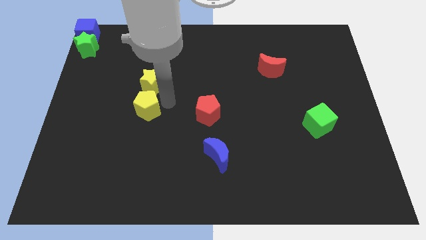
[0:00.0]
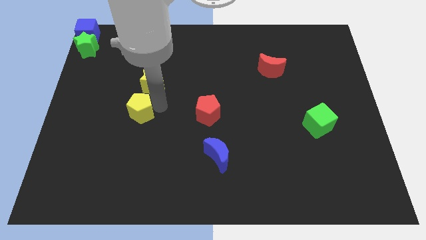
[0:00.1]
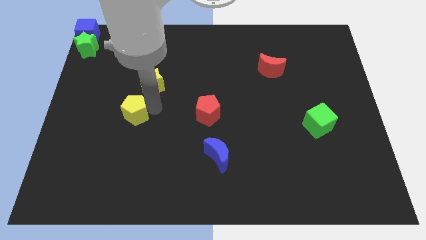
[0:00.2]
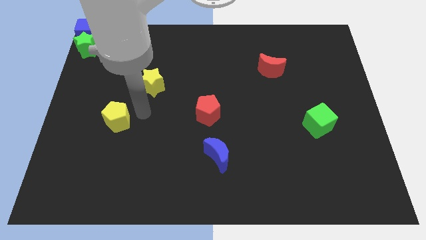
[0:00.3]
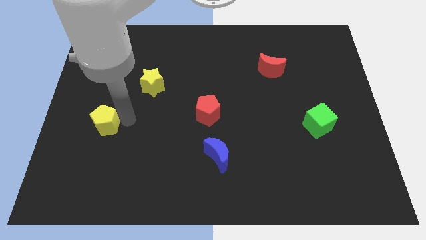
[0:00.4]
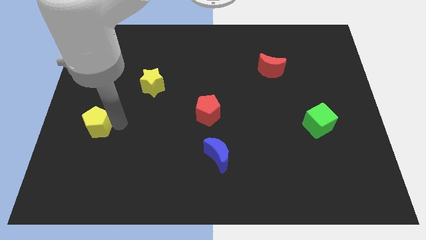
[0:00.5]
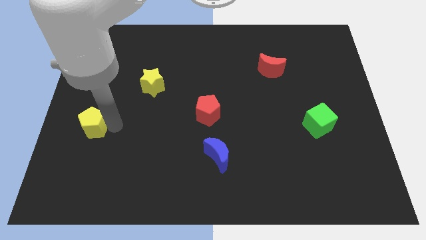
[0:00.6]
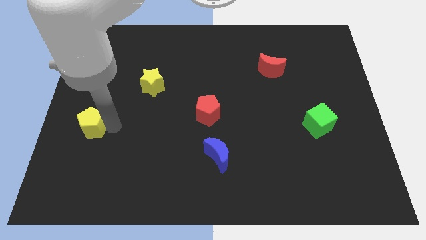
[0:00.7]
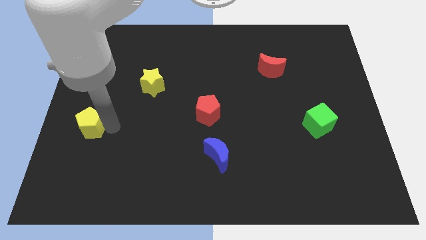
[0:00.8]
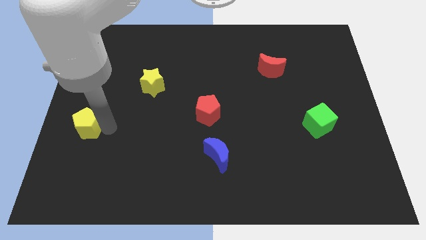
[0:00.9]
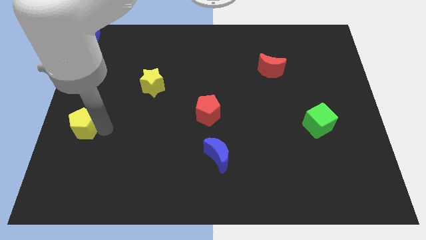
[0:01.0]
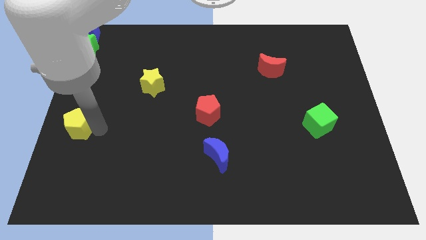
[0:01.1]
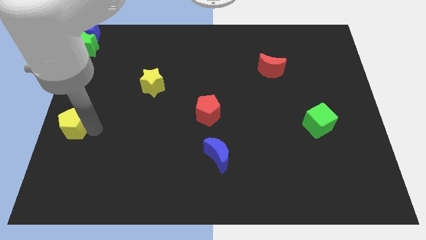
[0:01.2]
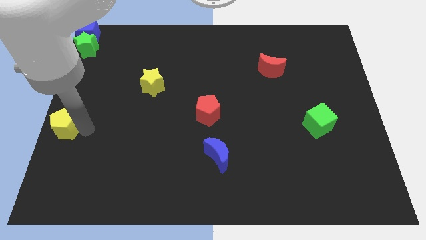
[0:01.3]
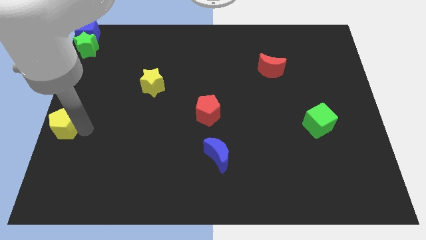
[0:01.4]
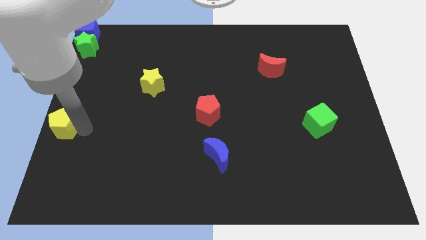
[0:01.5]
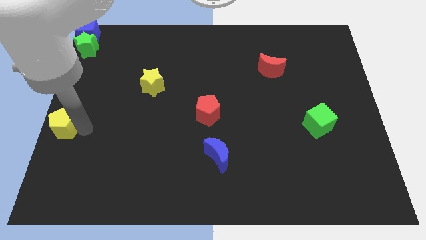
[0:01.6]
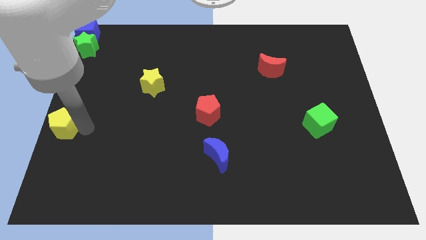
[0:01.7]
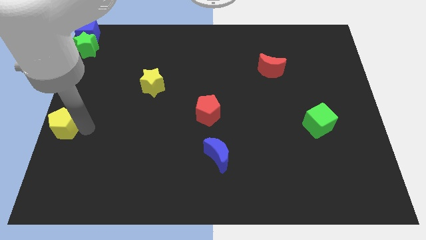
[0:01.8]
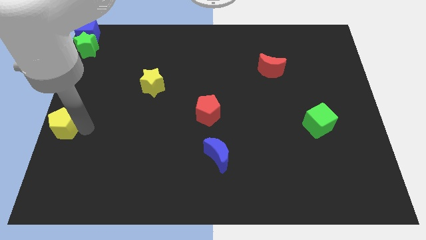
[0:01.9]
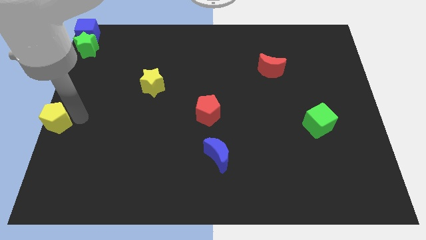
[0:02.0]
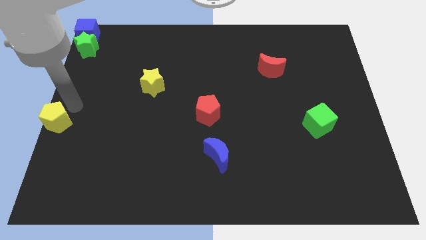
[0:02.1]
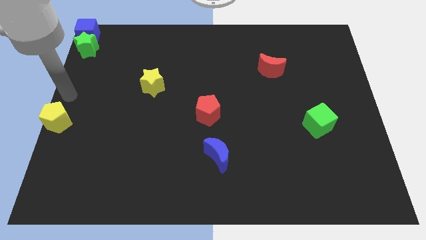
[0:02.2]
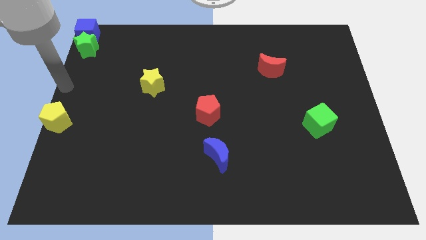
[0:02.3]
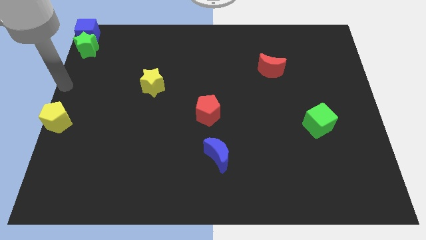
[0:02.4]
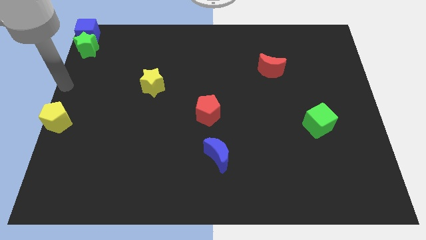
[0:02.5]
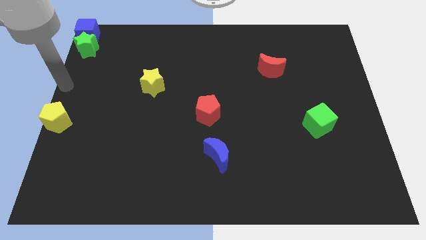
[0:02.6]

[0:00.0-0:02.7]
place the yellow pentagon to the center left

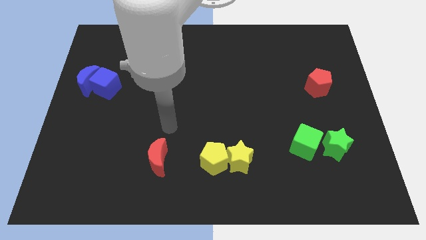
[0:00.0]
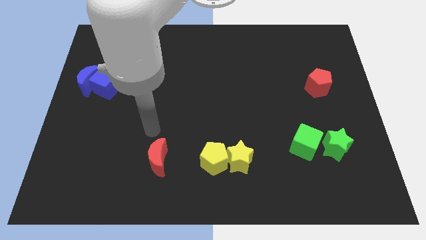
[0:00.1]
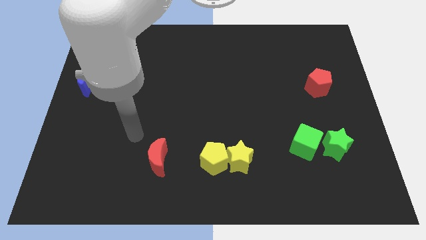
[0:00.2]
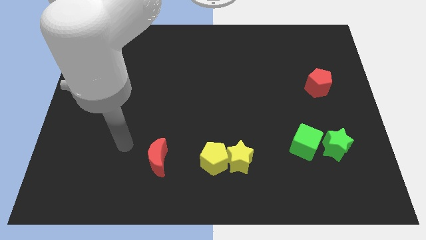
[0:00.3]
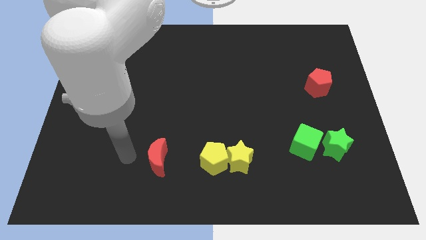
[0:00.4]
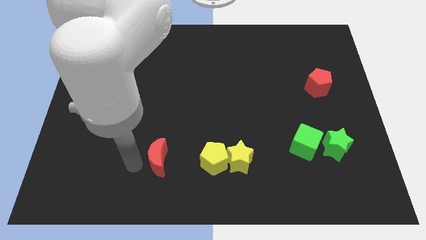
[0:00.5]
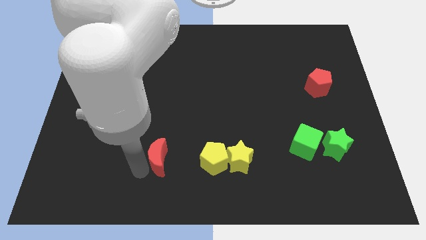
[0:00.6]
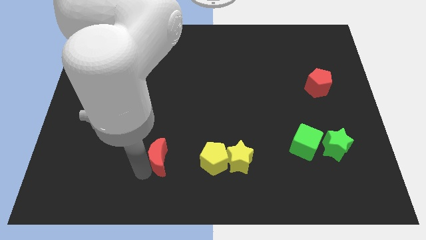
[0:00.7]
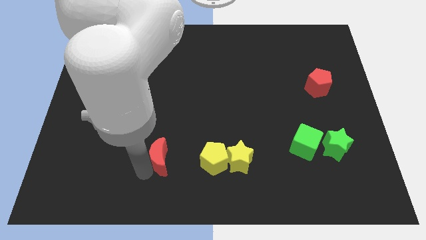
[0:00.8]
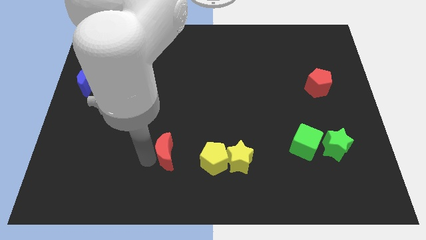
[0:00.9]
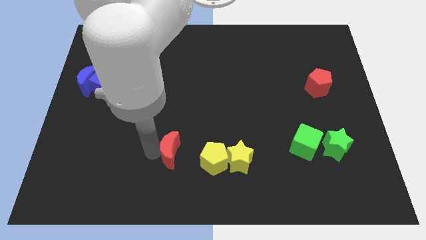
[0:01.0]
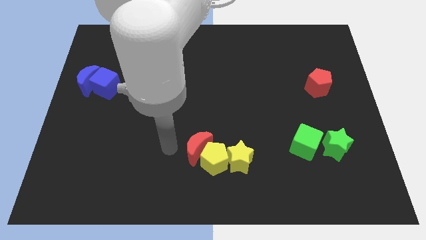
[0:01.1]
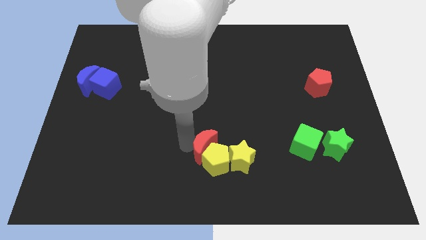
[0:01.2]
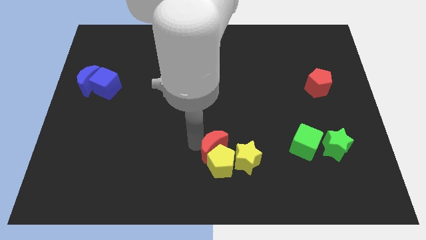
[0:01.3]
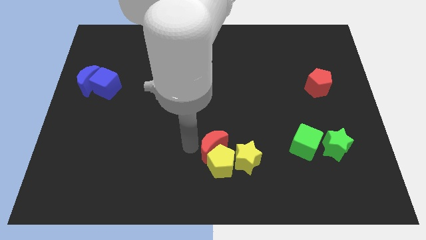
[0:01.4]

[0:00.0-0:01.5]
push the red moon into yellow pentagon

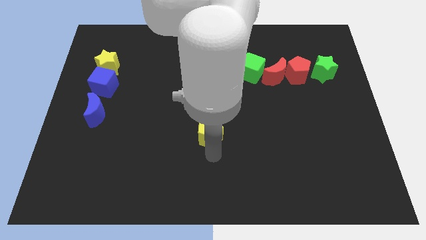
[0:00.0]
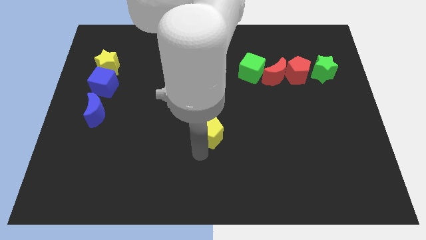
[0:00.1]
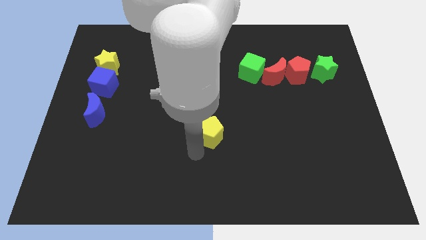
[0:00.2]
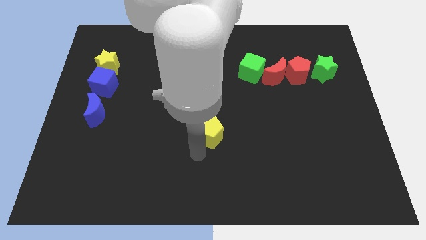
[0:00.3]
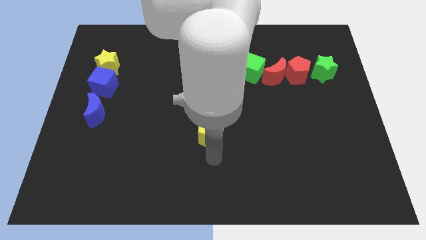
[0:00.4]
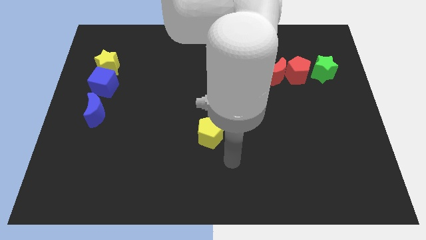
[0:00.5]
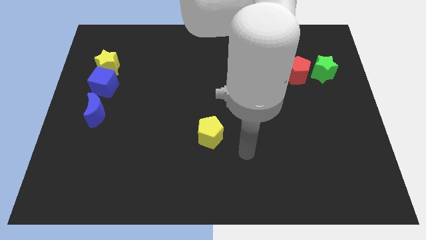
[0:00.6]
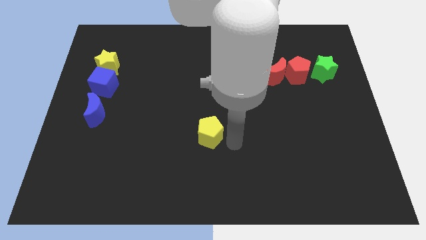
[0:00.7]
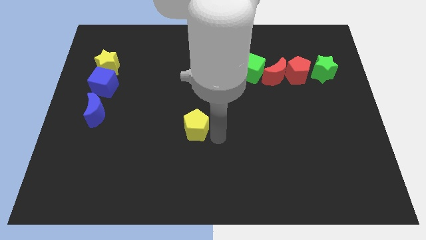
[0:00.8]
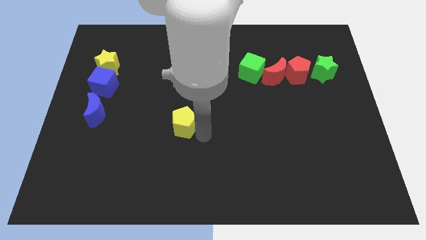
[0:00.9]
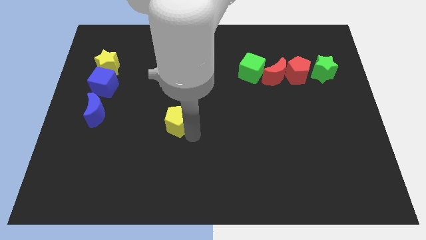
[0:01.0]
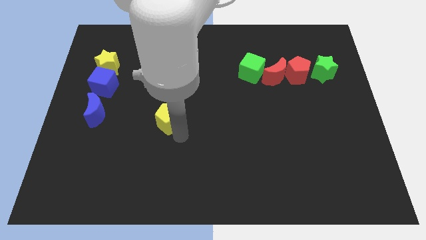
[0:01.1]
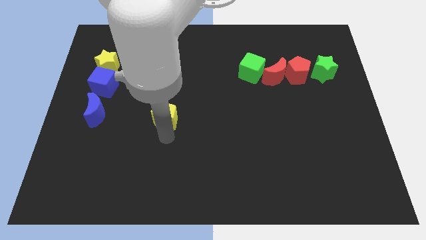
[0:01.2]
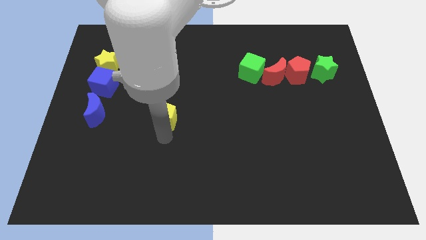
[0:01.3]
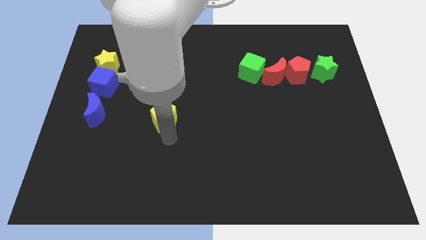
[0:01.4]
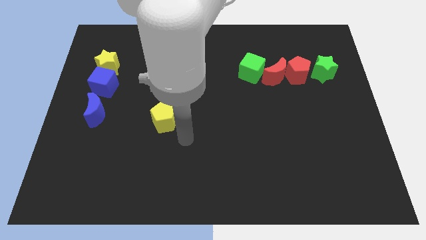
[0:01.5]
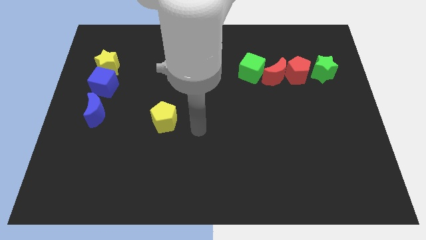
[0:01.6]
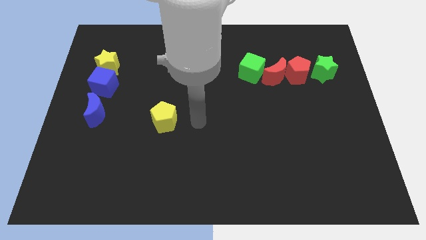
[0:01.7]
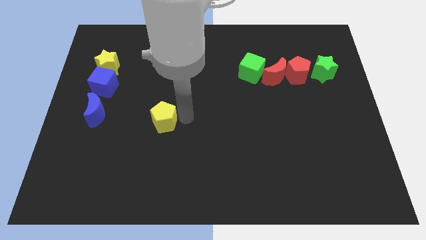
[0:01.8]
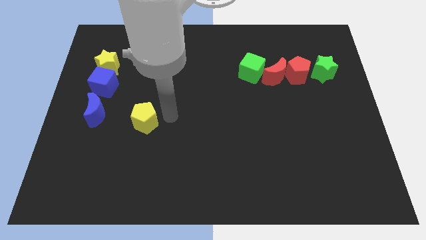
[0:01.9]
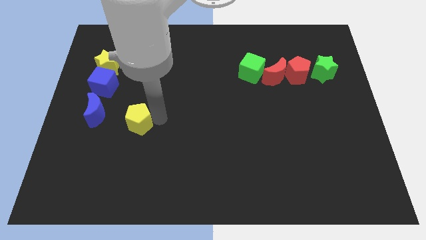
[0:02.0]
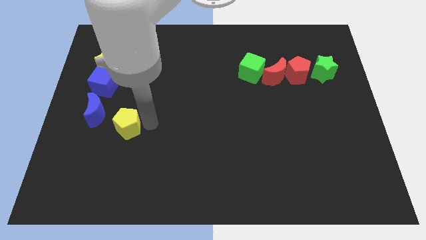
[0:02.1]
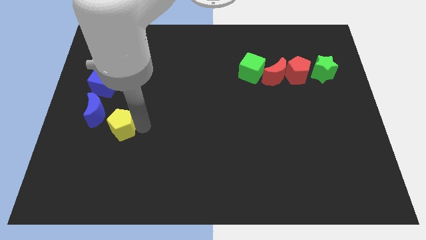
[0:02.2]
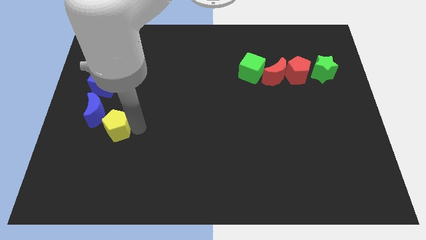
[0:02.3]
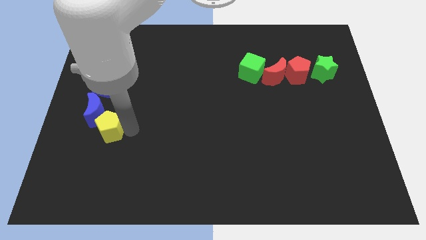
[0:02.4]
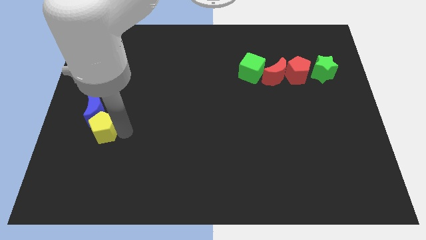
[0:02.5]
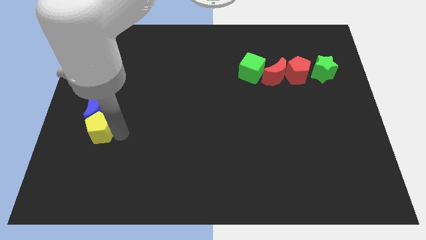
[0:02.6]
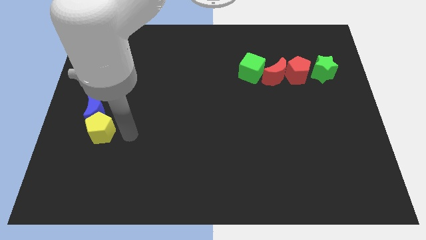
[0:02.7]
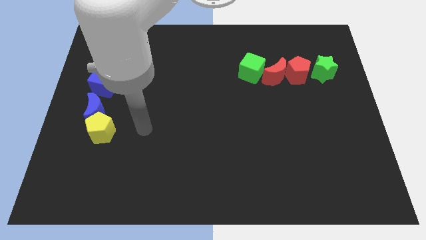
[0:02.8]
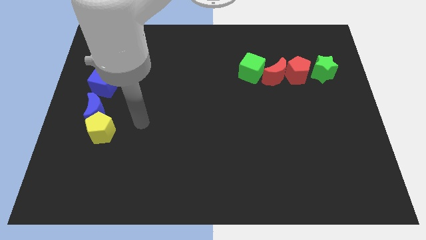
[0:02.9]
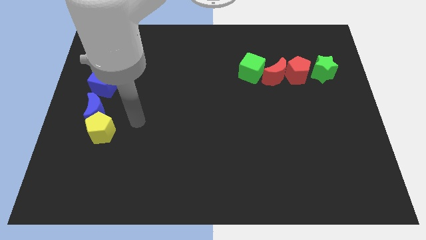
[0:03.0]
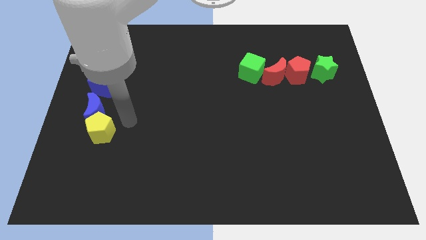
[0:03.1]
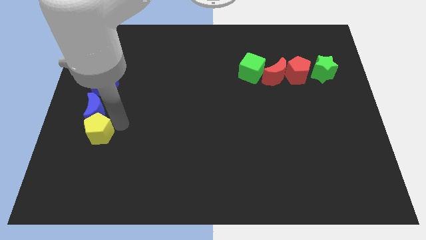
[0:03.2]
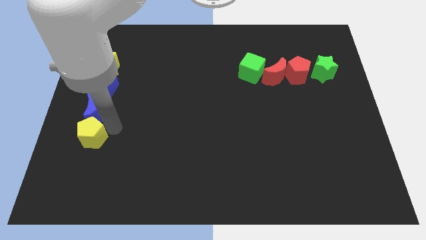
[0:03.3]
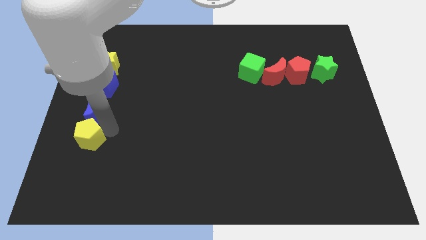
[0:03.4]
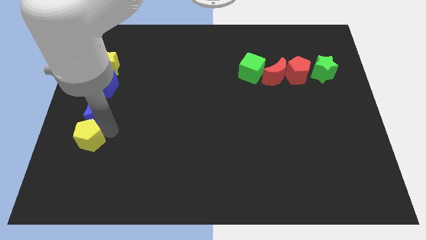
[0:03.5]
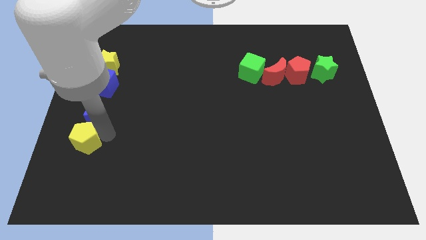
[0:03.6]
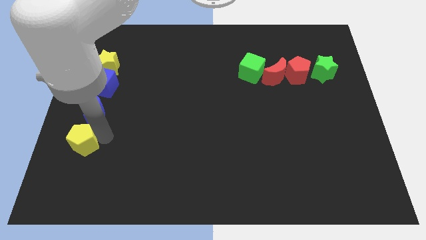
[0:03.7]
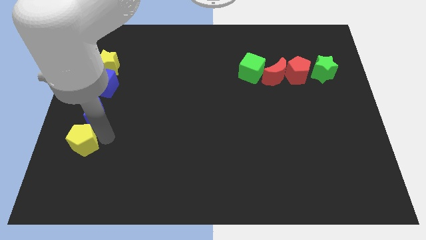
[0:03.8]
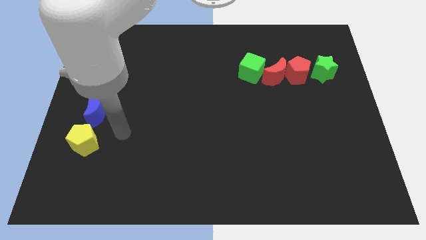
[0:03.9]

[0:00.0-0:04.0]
slide the yellow pentagon below the blue moon

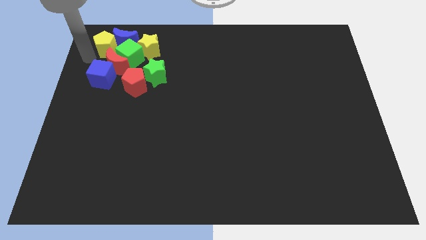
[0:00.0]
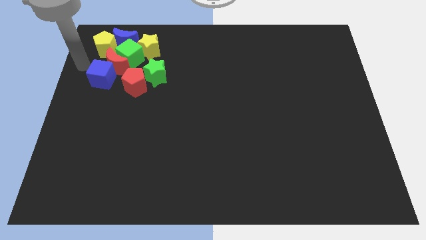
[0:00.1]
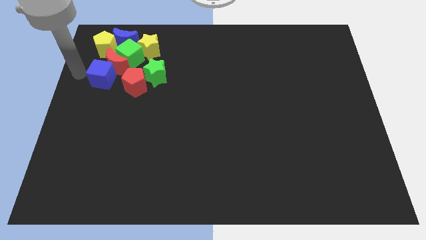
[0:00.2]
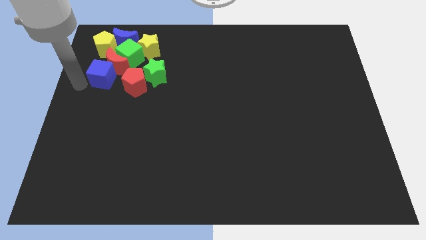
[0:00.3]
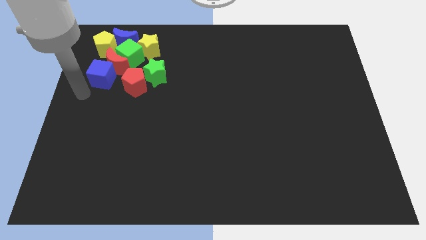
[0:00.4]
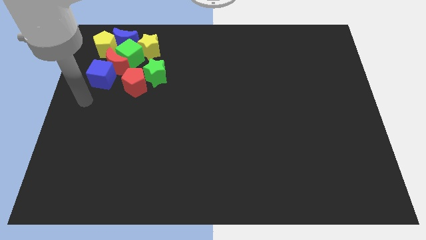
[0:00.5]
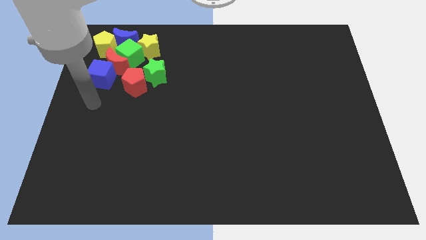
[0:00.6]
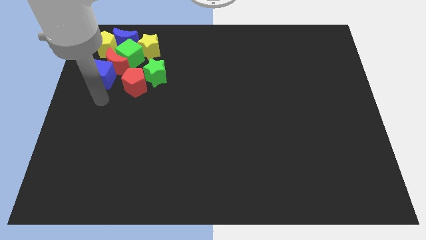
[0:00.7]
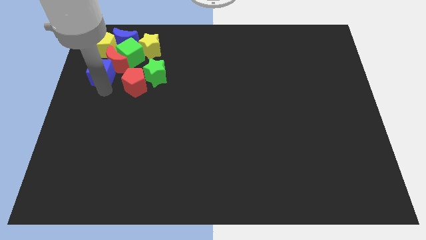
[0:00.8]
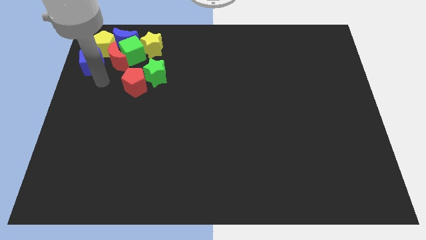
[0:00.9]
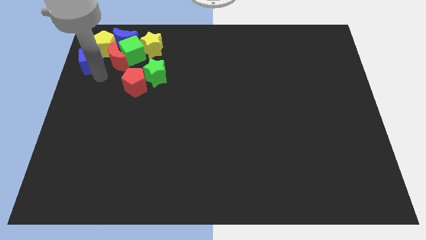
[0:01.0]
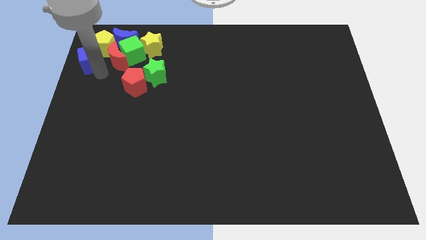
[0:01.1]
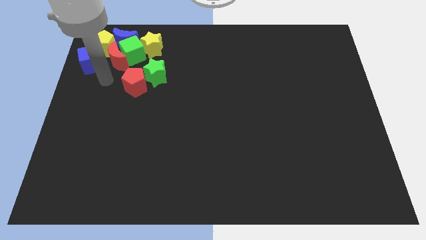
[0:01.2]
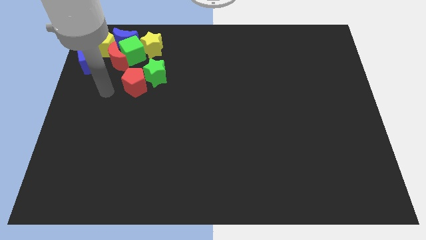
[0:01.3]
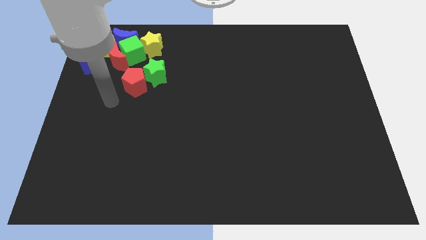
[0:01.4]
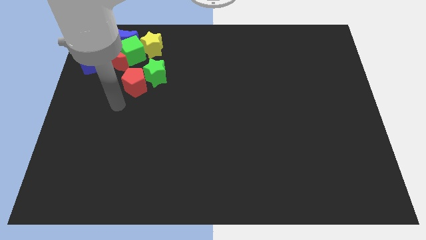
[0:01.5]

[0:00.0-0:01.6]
push the blue cube diagonal below yellow pentagon
